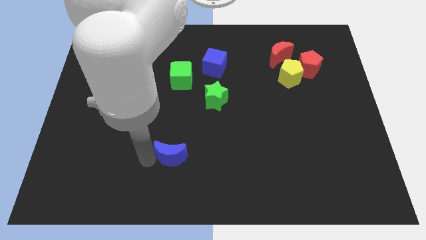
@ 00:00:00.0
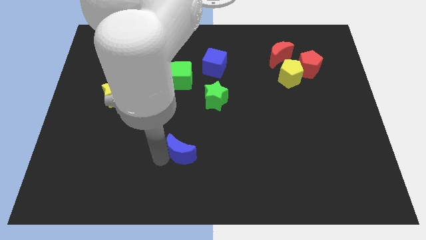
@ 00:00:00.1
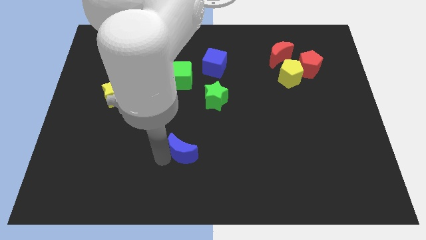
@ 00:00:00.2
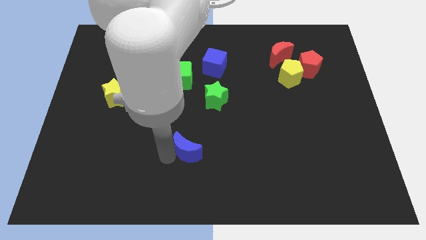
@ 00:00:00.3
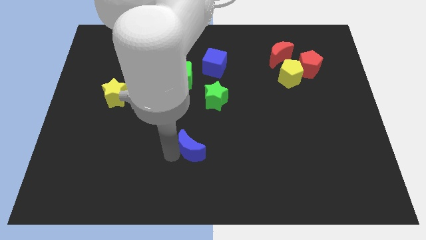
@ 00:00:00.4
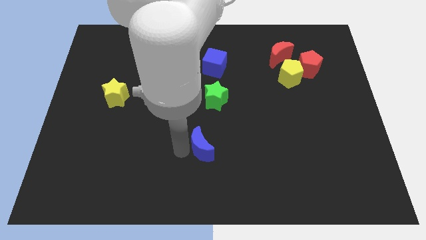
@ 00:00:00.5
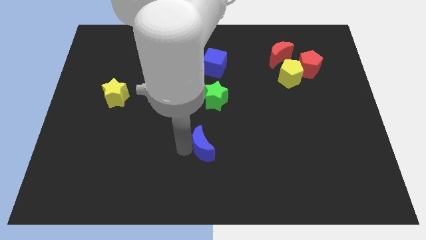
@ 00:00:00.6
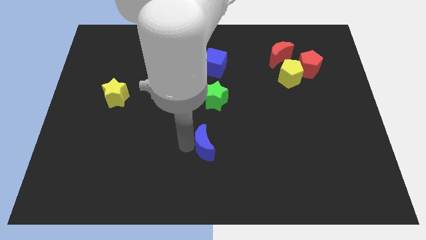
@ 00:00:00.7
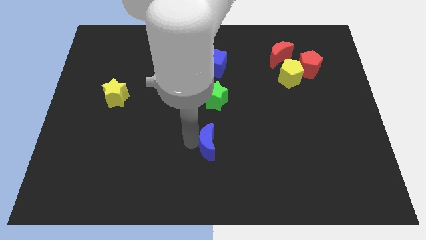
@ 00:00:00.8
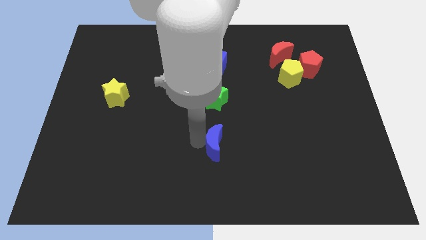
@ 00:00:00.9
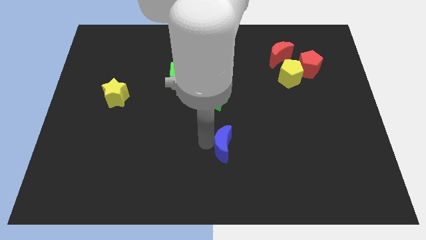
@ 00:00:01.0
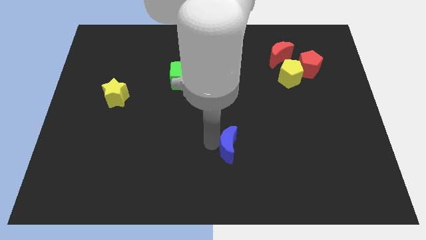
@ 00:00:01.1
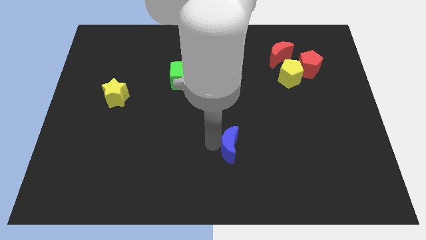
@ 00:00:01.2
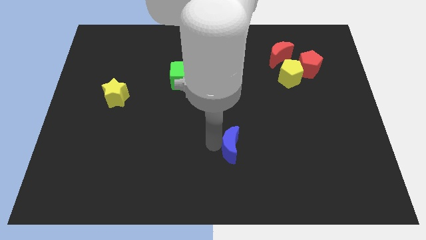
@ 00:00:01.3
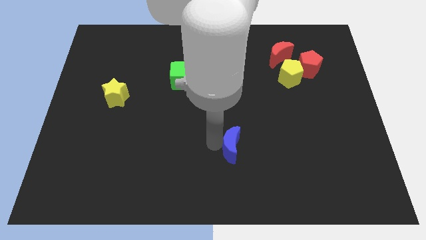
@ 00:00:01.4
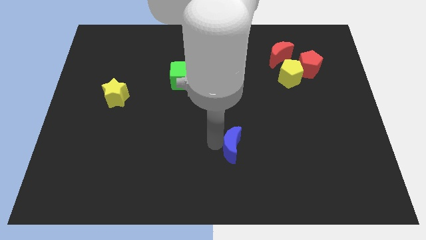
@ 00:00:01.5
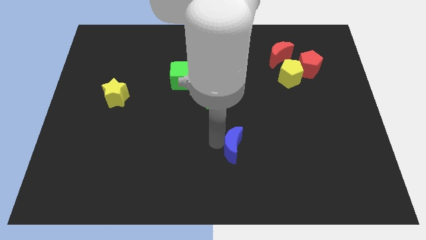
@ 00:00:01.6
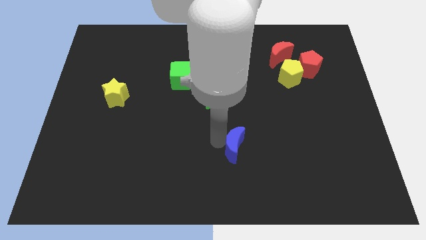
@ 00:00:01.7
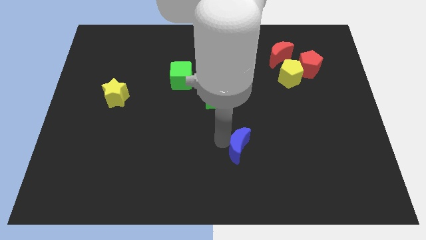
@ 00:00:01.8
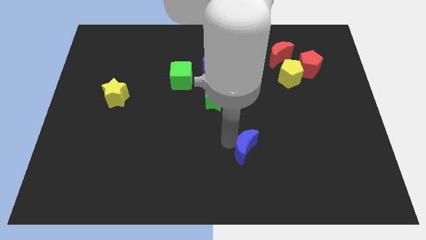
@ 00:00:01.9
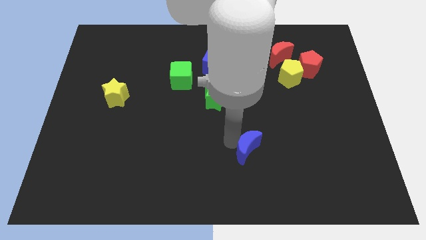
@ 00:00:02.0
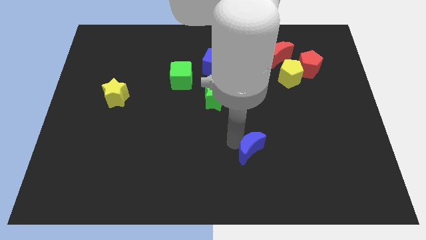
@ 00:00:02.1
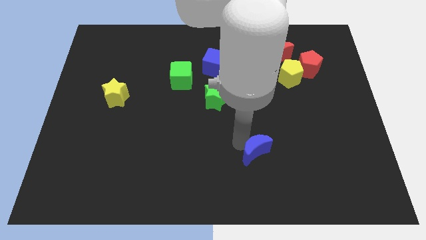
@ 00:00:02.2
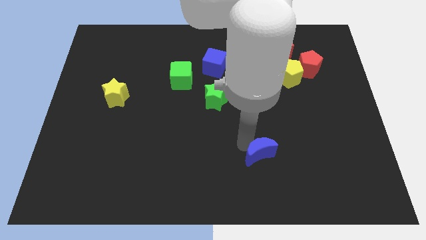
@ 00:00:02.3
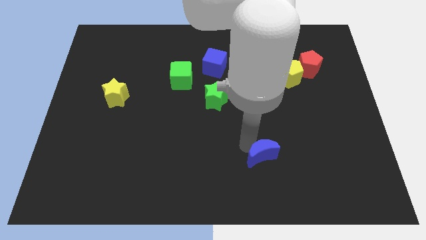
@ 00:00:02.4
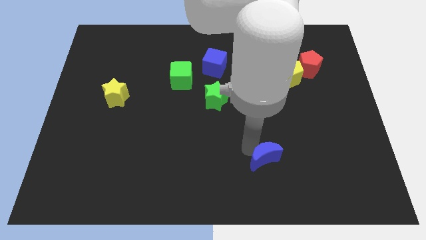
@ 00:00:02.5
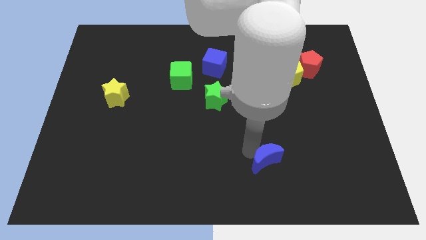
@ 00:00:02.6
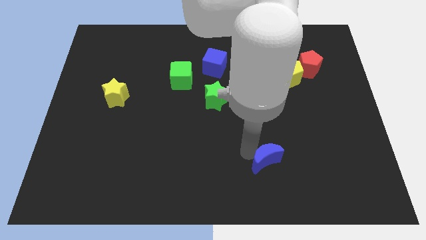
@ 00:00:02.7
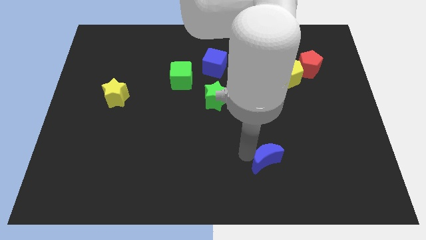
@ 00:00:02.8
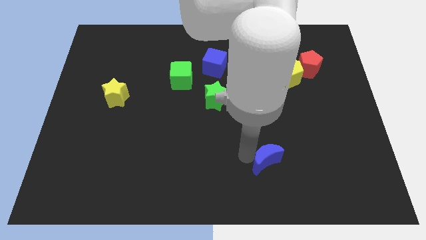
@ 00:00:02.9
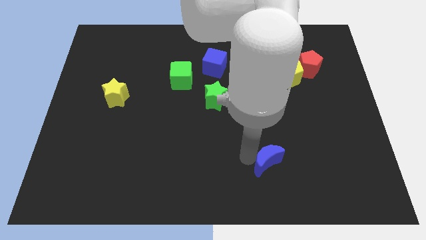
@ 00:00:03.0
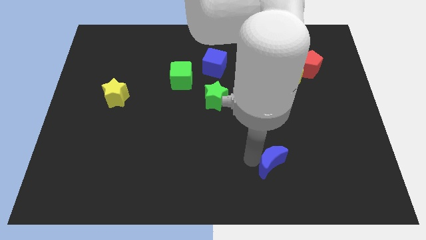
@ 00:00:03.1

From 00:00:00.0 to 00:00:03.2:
slide the blue crescent towards the bottom right side of the board

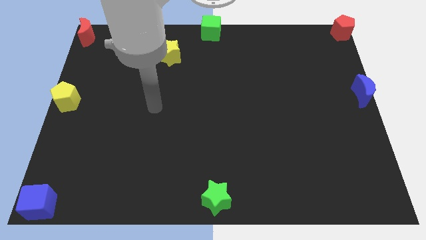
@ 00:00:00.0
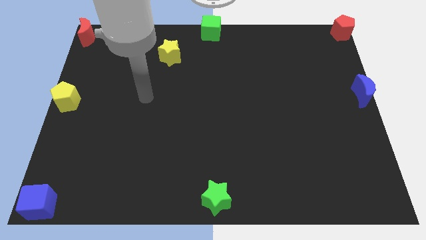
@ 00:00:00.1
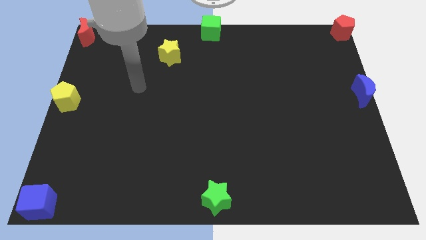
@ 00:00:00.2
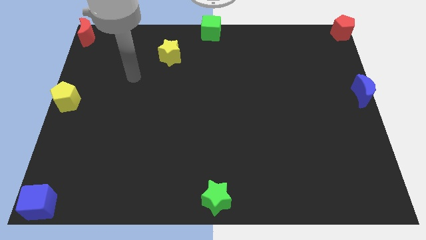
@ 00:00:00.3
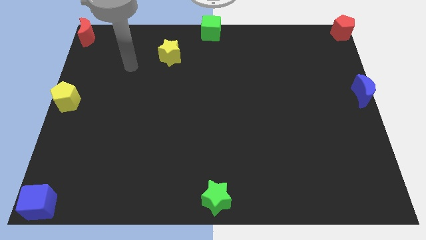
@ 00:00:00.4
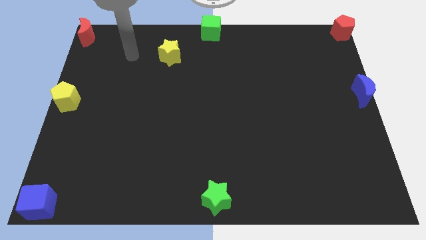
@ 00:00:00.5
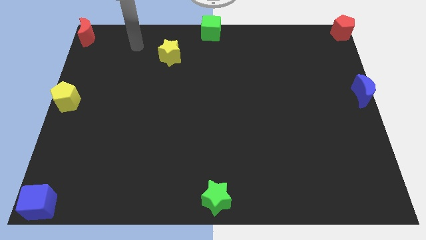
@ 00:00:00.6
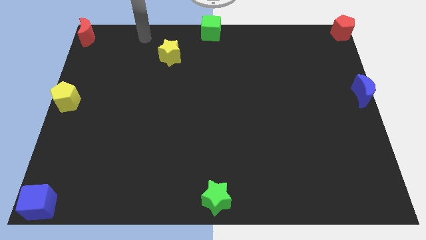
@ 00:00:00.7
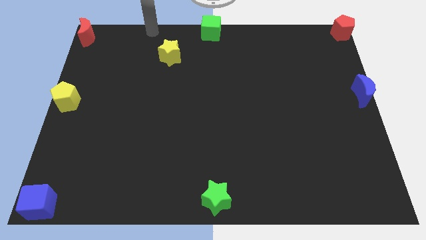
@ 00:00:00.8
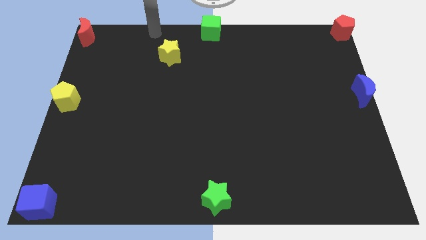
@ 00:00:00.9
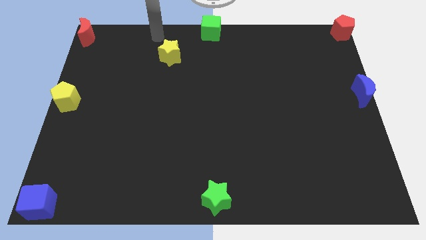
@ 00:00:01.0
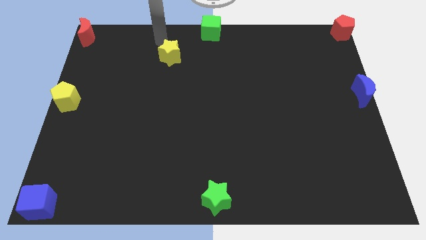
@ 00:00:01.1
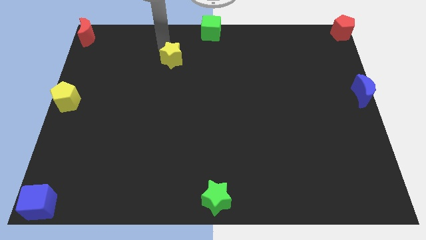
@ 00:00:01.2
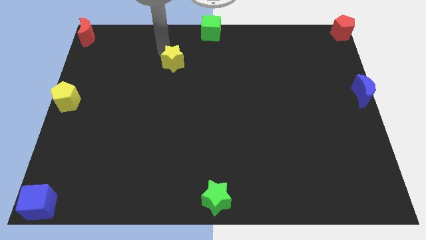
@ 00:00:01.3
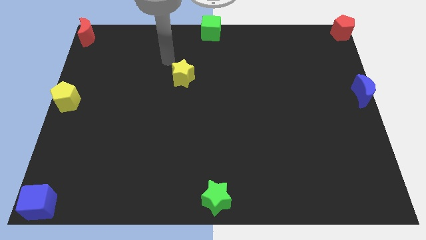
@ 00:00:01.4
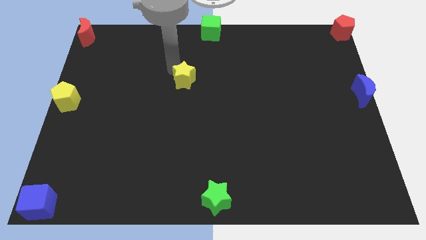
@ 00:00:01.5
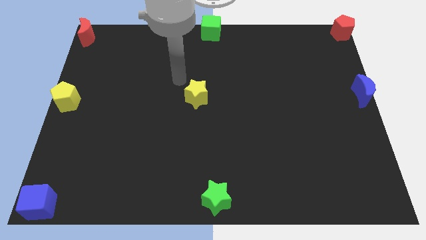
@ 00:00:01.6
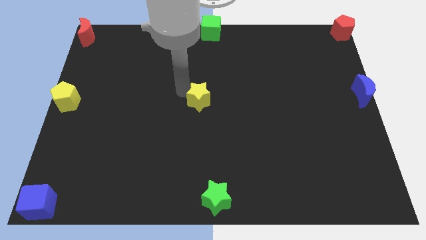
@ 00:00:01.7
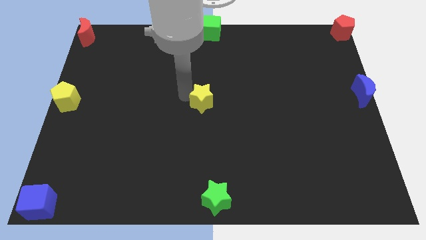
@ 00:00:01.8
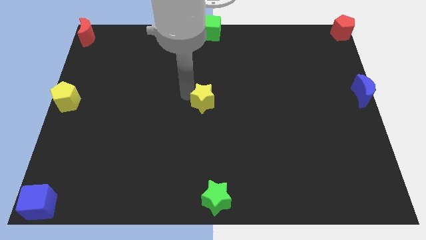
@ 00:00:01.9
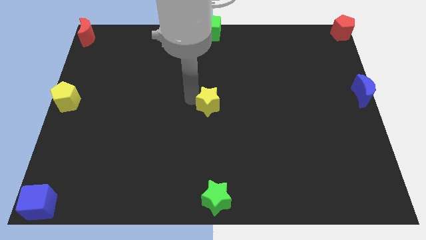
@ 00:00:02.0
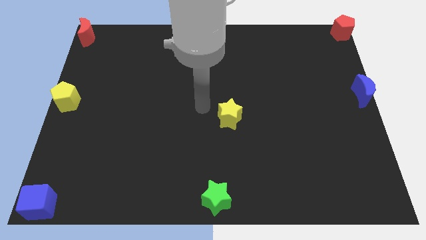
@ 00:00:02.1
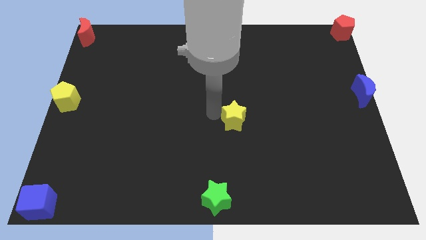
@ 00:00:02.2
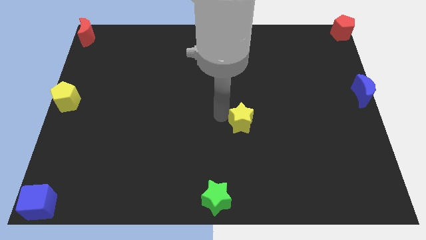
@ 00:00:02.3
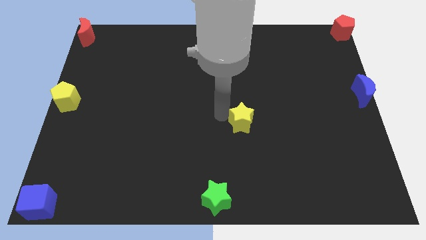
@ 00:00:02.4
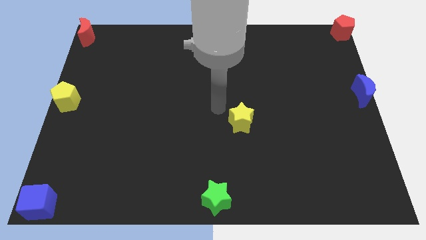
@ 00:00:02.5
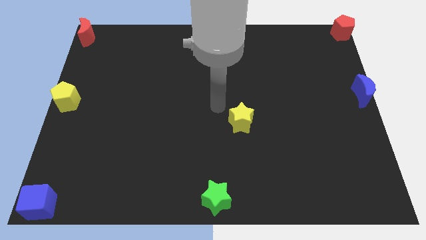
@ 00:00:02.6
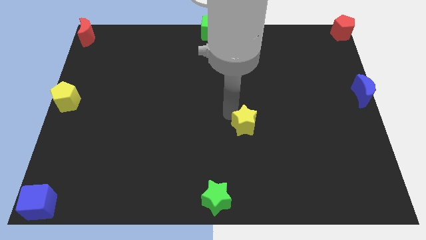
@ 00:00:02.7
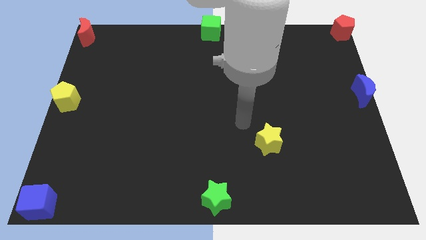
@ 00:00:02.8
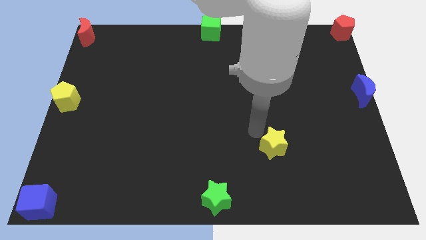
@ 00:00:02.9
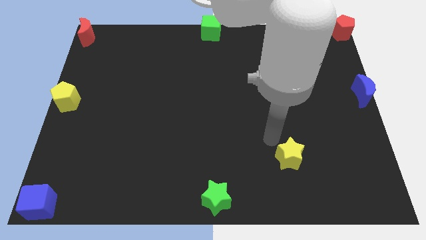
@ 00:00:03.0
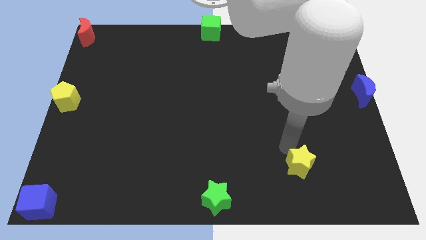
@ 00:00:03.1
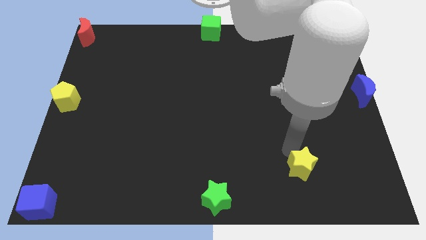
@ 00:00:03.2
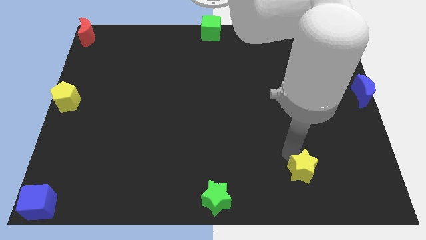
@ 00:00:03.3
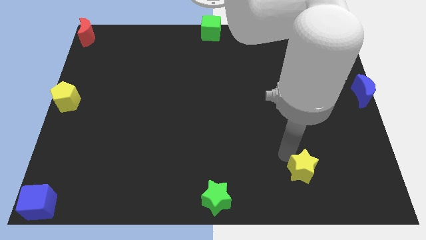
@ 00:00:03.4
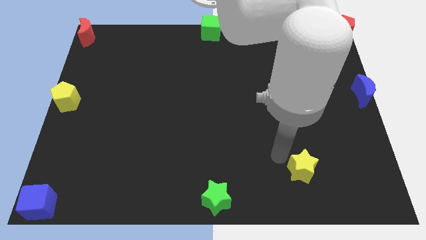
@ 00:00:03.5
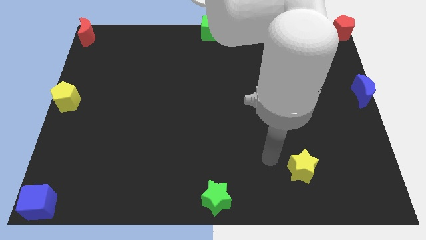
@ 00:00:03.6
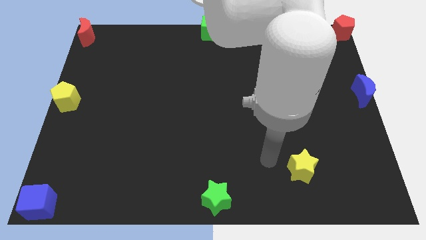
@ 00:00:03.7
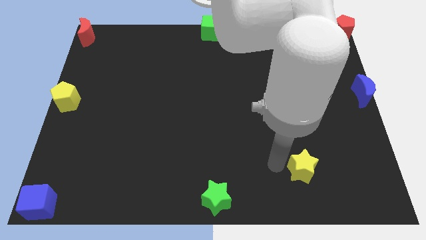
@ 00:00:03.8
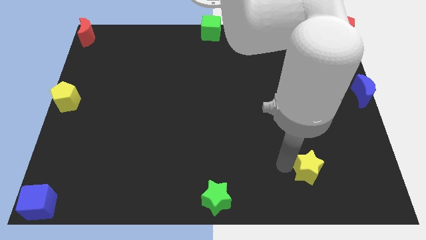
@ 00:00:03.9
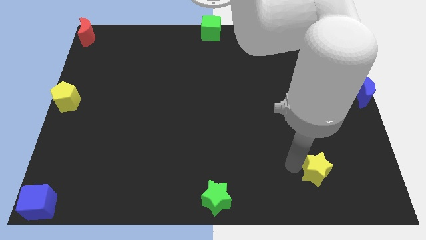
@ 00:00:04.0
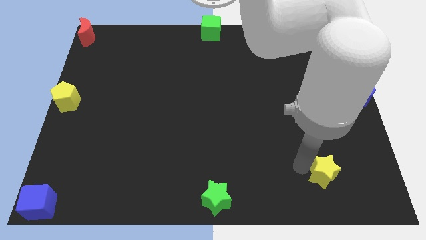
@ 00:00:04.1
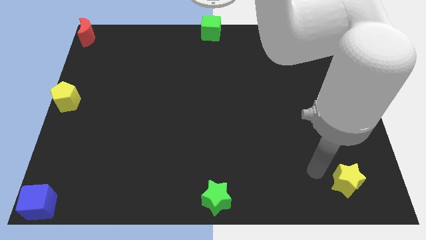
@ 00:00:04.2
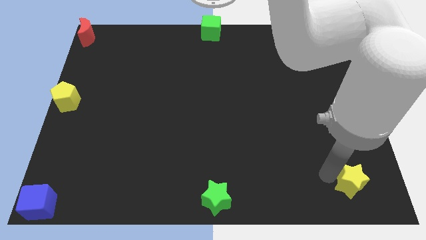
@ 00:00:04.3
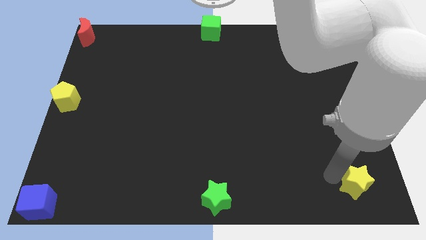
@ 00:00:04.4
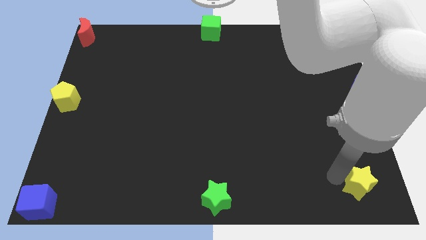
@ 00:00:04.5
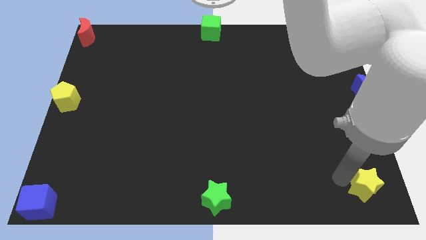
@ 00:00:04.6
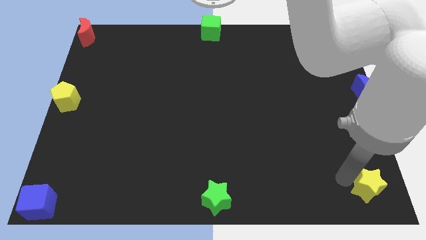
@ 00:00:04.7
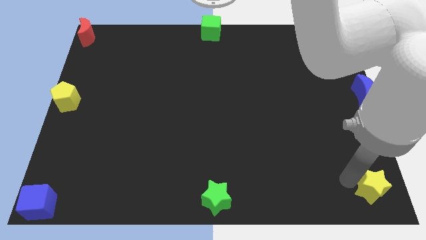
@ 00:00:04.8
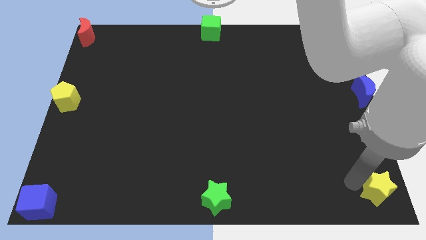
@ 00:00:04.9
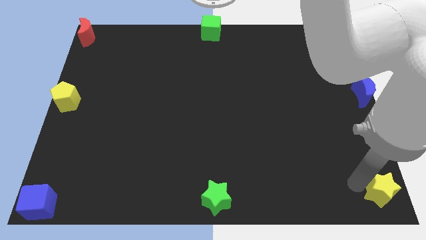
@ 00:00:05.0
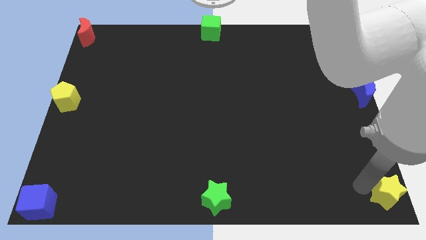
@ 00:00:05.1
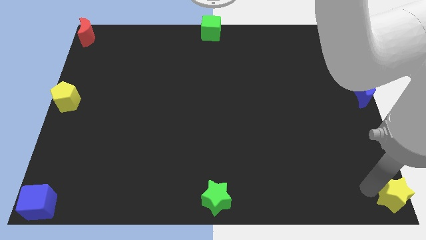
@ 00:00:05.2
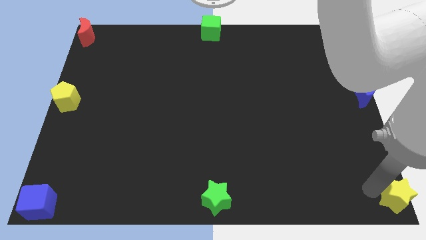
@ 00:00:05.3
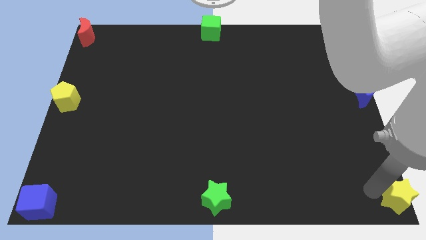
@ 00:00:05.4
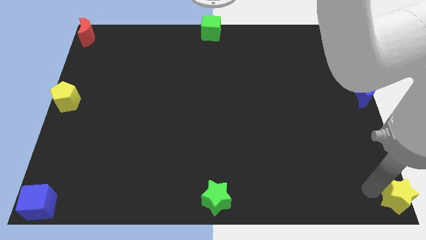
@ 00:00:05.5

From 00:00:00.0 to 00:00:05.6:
move the yellow star to right corner of the board
